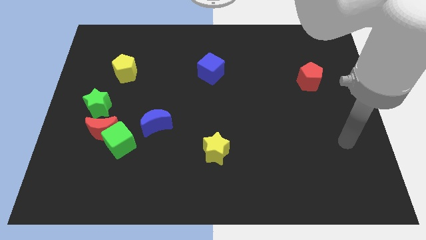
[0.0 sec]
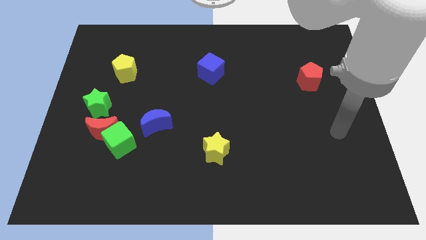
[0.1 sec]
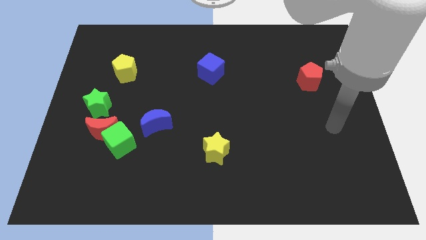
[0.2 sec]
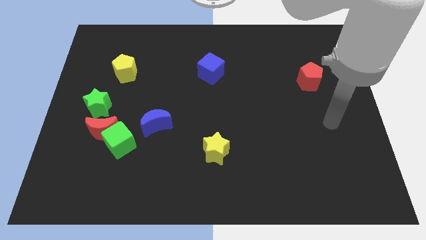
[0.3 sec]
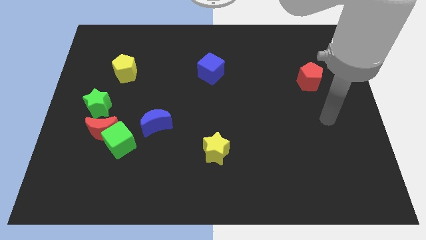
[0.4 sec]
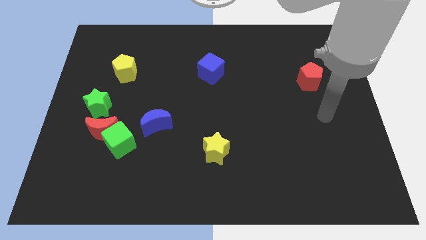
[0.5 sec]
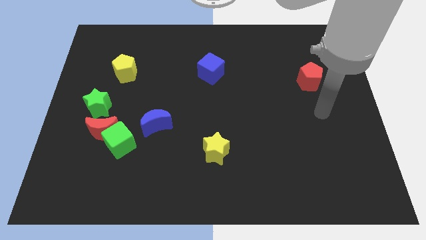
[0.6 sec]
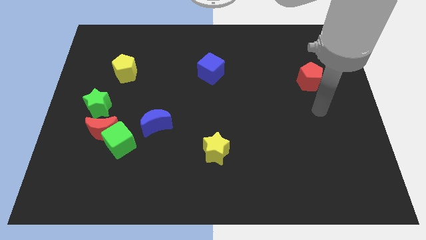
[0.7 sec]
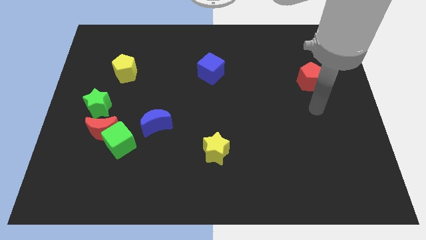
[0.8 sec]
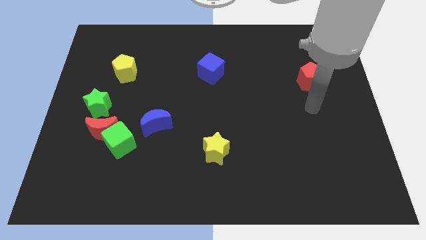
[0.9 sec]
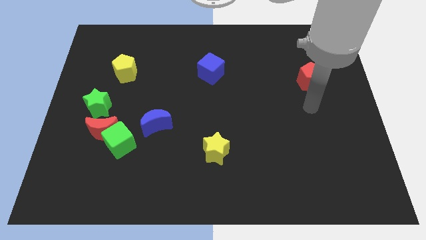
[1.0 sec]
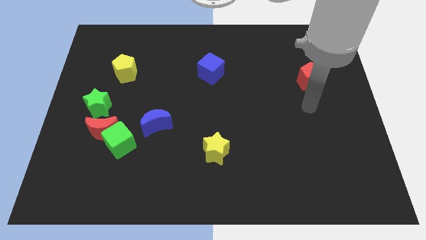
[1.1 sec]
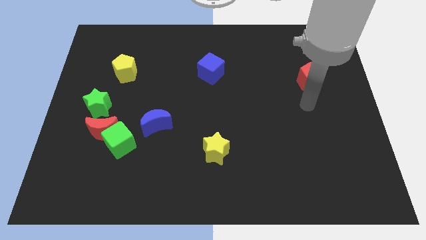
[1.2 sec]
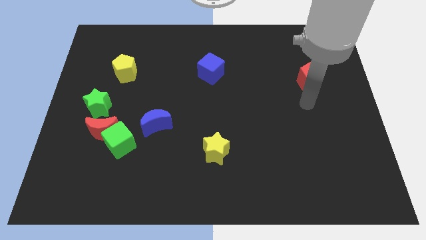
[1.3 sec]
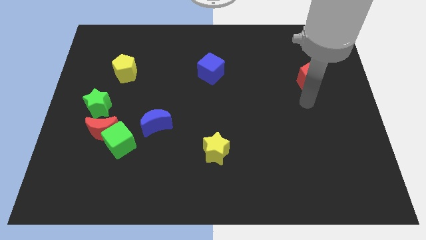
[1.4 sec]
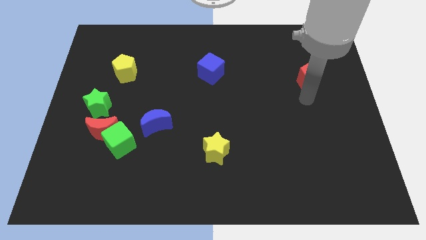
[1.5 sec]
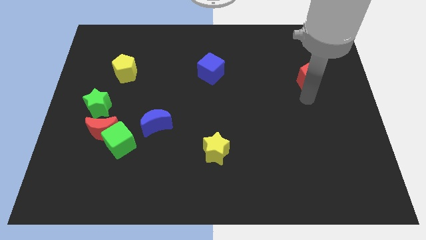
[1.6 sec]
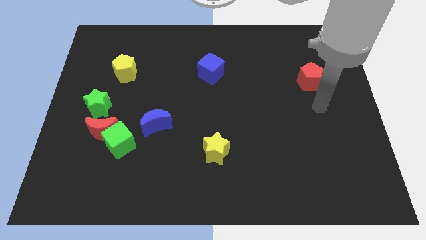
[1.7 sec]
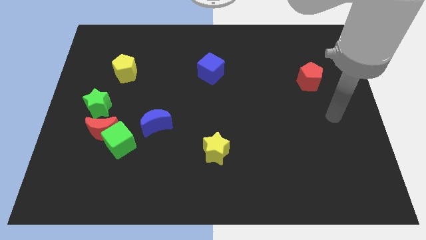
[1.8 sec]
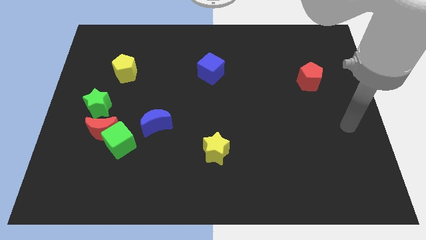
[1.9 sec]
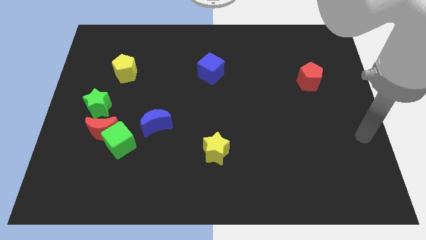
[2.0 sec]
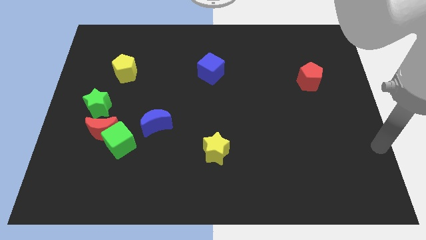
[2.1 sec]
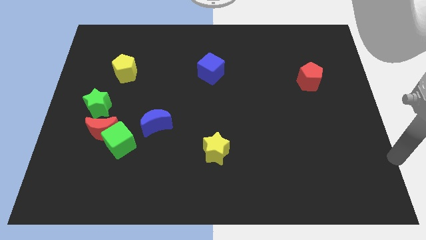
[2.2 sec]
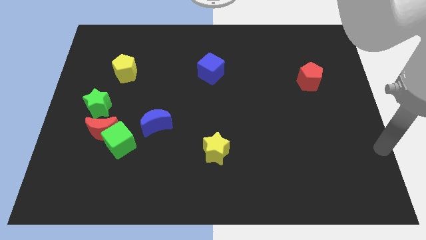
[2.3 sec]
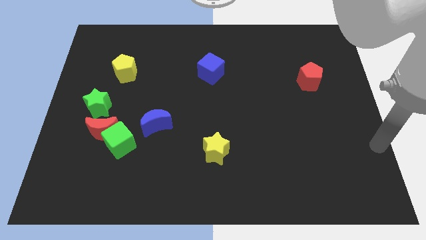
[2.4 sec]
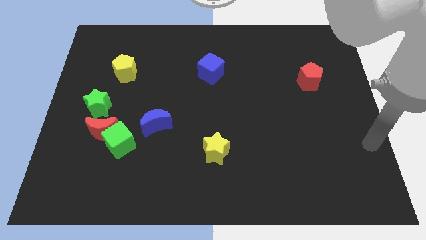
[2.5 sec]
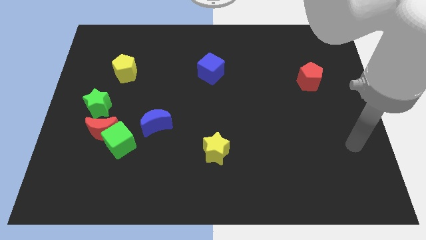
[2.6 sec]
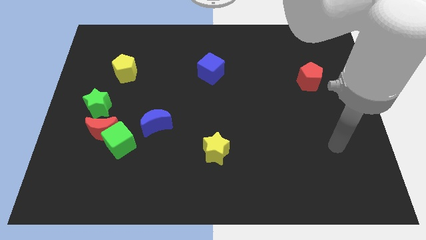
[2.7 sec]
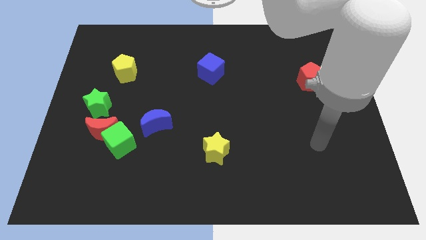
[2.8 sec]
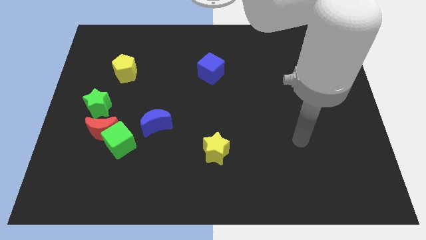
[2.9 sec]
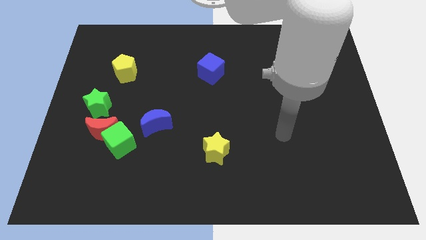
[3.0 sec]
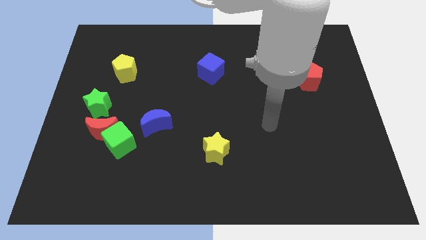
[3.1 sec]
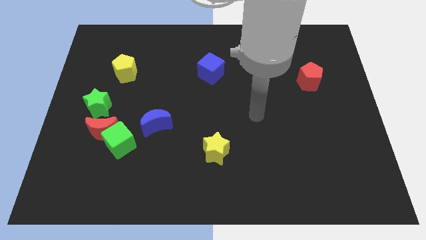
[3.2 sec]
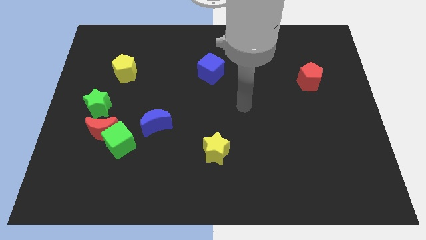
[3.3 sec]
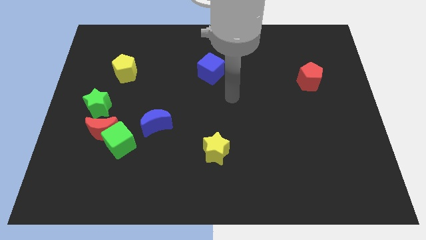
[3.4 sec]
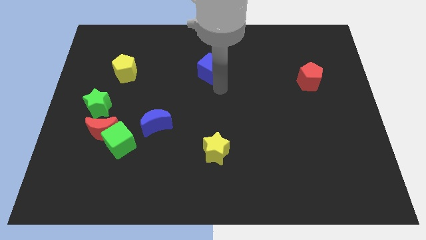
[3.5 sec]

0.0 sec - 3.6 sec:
point the arm below the blue cube

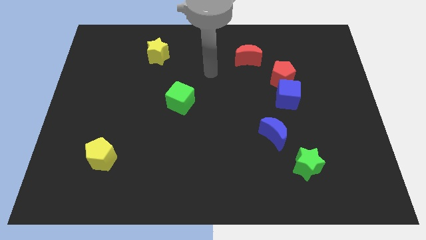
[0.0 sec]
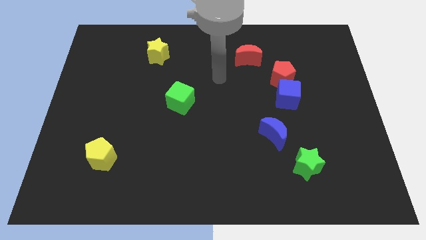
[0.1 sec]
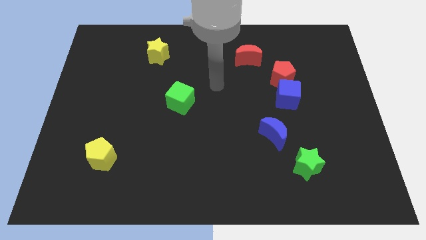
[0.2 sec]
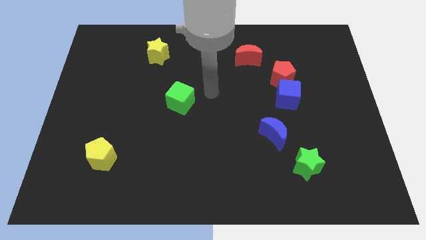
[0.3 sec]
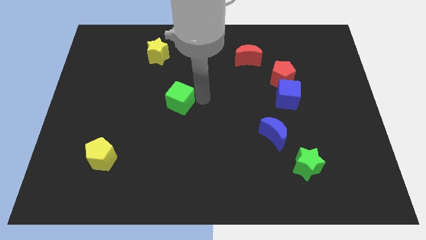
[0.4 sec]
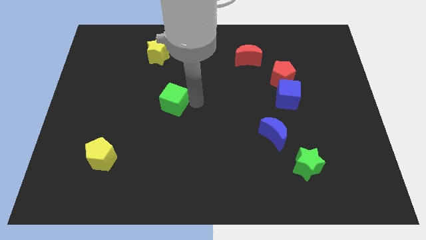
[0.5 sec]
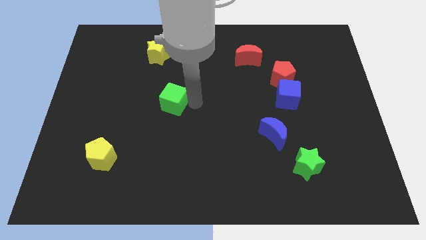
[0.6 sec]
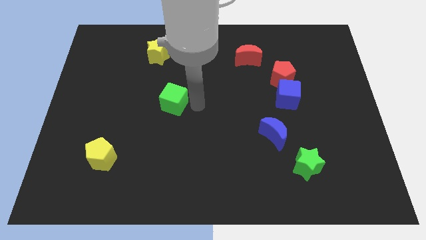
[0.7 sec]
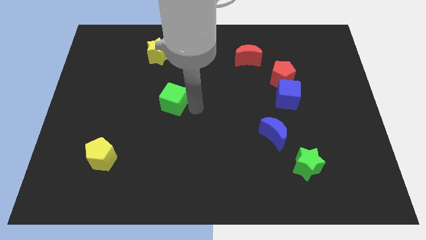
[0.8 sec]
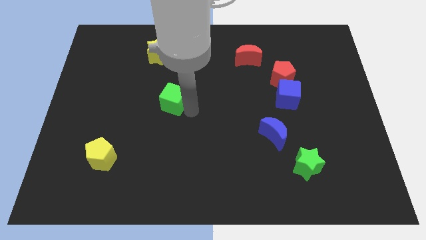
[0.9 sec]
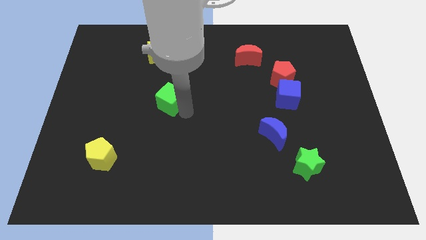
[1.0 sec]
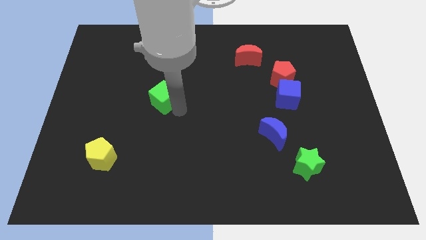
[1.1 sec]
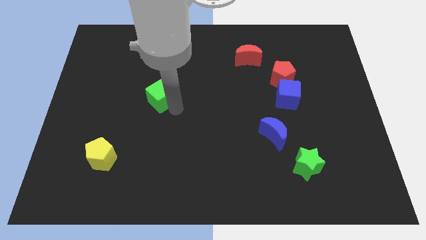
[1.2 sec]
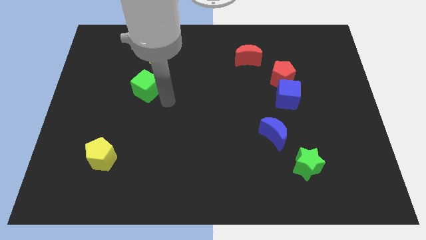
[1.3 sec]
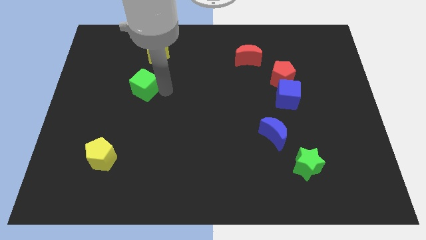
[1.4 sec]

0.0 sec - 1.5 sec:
place the green cube below the yellow star

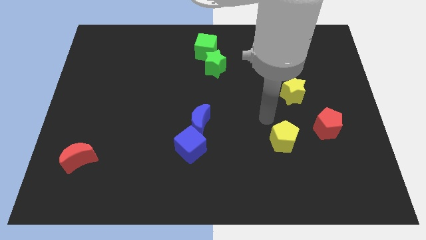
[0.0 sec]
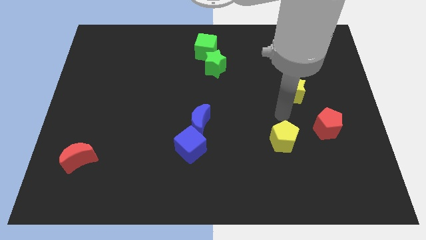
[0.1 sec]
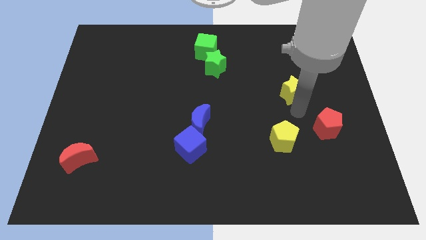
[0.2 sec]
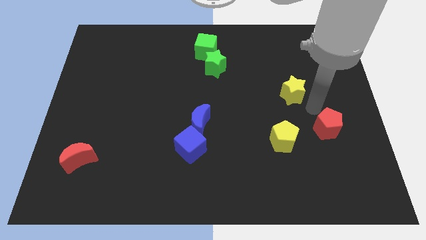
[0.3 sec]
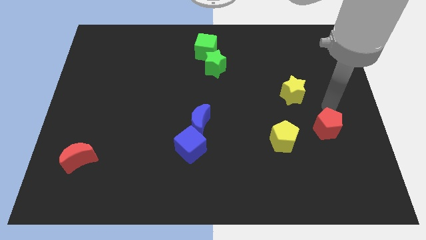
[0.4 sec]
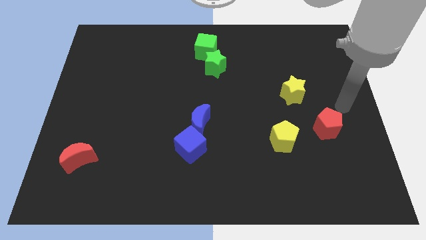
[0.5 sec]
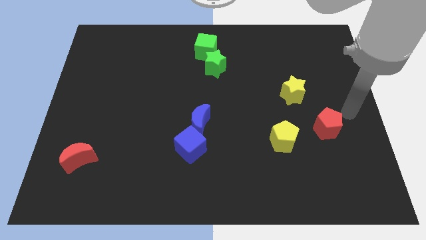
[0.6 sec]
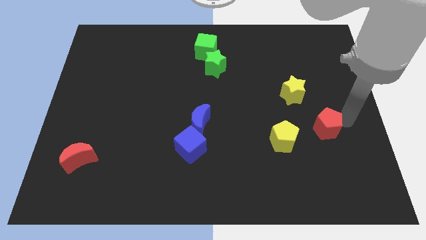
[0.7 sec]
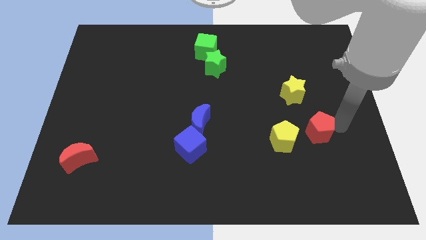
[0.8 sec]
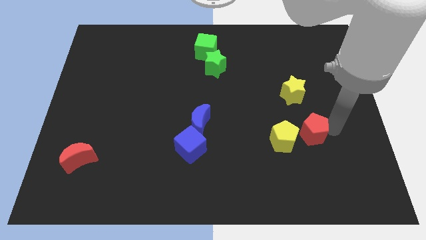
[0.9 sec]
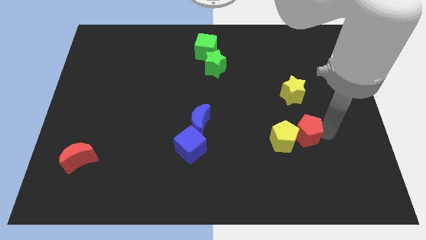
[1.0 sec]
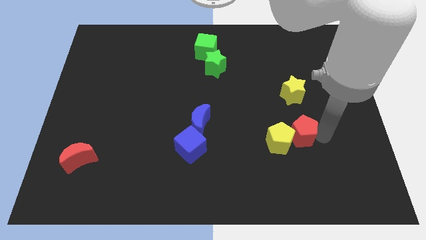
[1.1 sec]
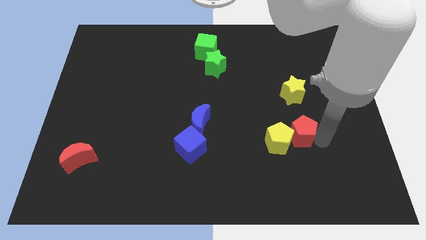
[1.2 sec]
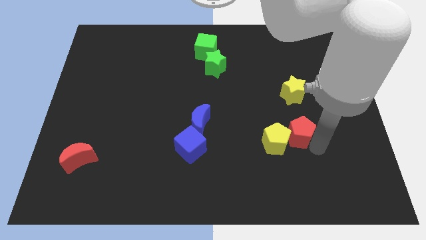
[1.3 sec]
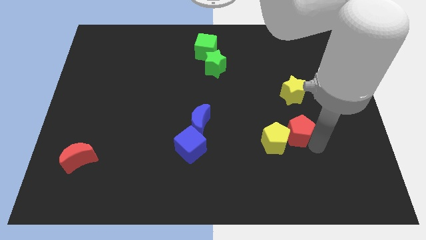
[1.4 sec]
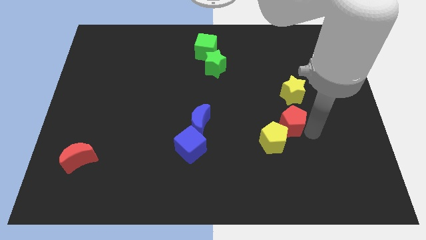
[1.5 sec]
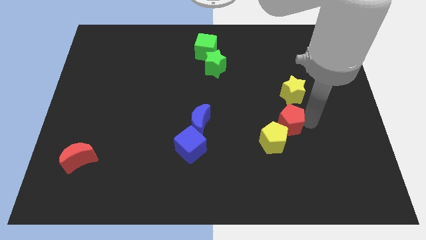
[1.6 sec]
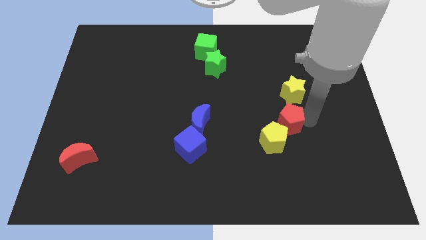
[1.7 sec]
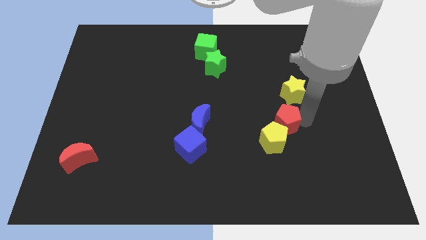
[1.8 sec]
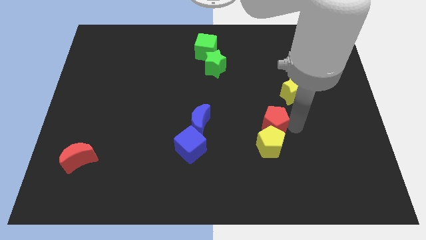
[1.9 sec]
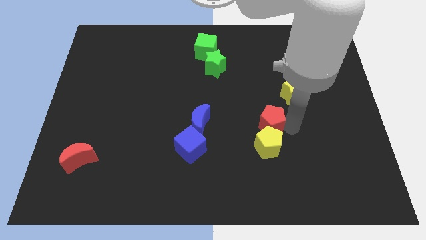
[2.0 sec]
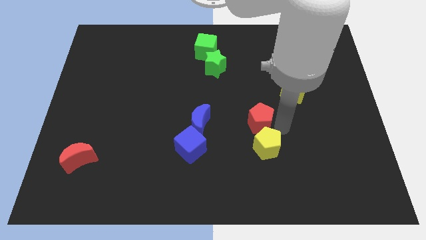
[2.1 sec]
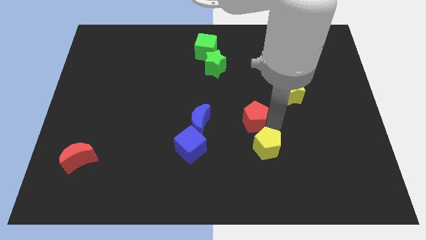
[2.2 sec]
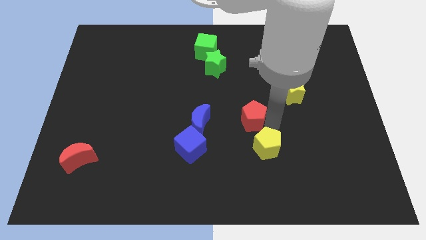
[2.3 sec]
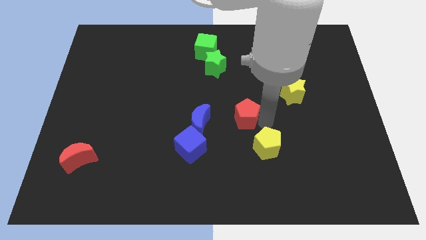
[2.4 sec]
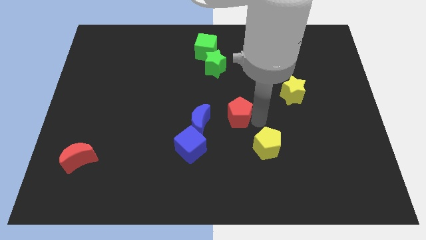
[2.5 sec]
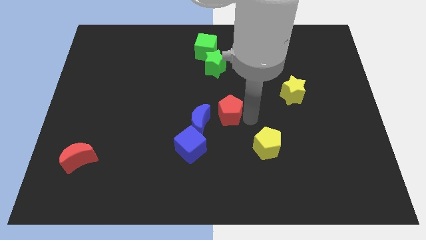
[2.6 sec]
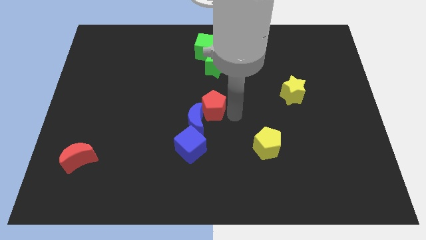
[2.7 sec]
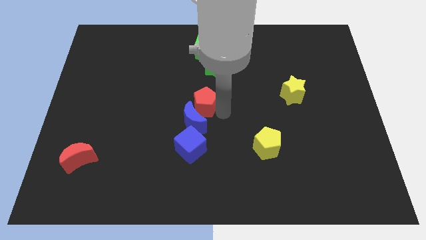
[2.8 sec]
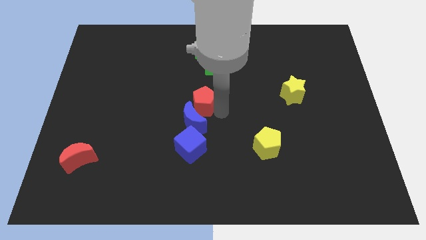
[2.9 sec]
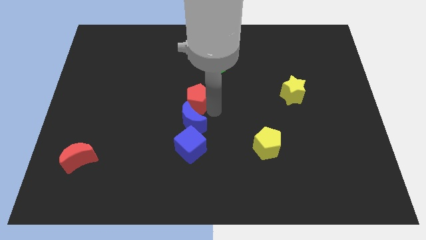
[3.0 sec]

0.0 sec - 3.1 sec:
place the red pentagon at the top of the blue crescent

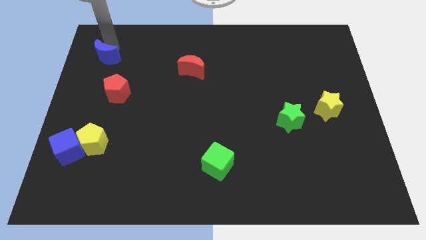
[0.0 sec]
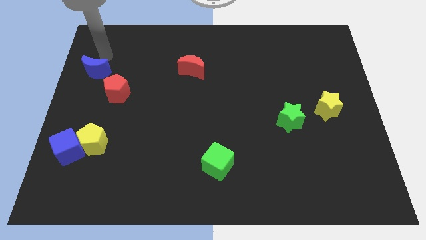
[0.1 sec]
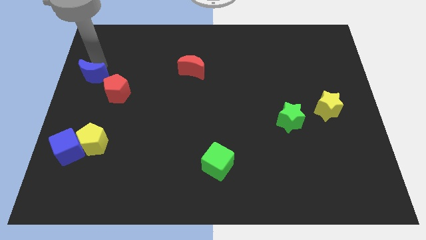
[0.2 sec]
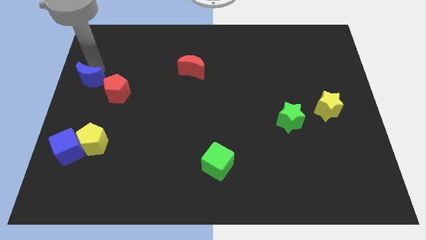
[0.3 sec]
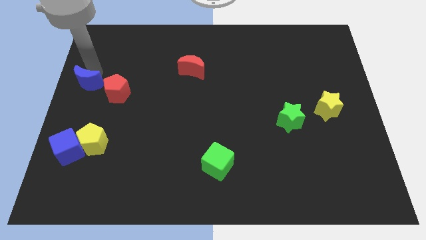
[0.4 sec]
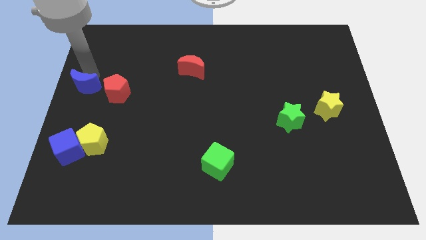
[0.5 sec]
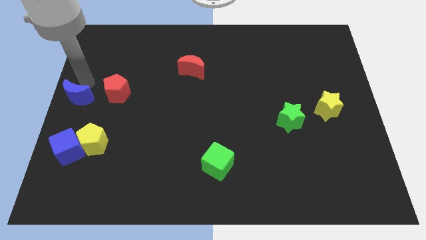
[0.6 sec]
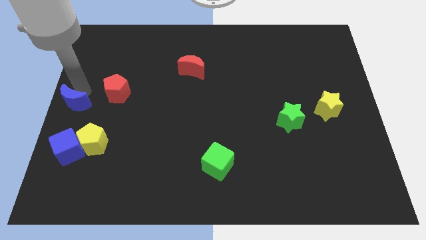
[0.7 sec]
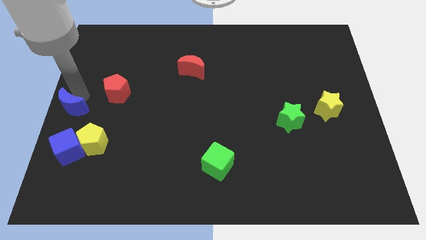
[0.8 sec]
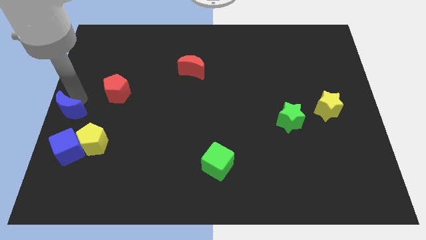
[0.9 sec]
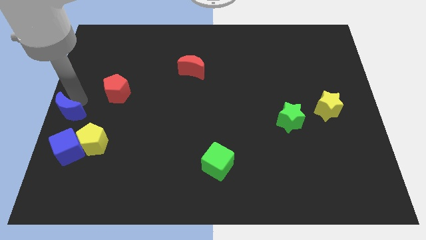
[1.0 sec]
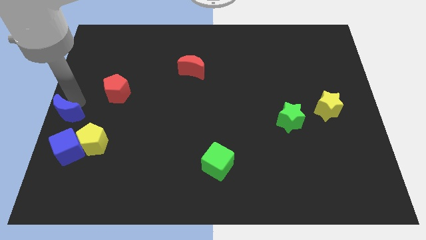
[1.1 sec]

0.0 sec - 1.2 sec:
drag the blue moon at the center left
